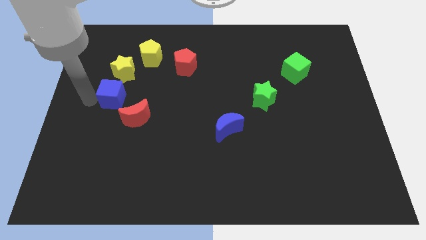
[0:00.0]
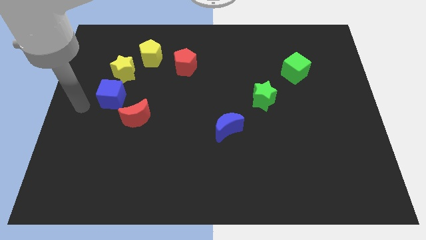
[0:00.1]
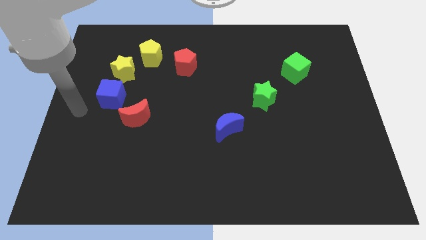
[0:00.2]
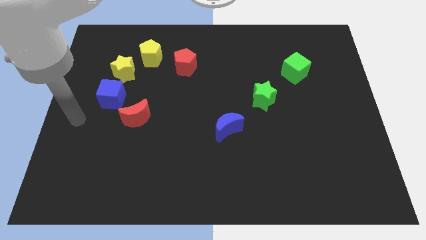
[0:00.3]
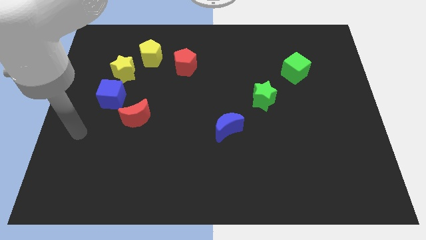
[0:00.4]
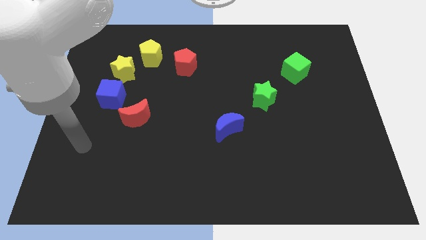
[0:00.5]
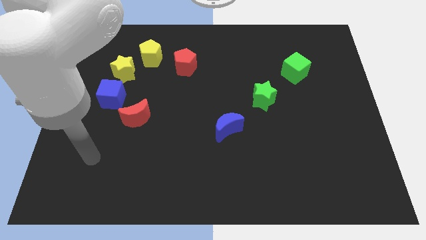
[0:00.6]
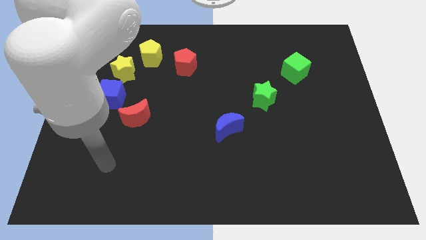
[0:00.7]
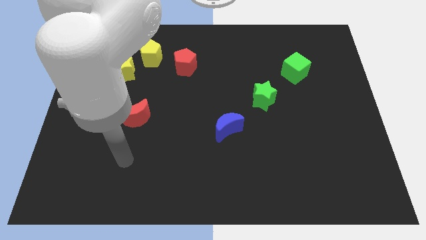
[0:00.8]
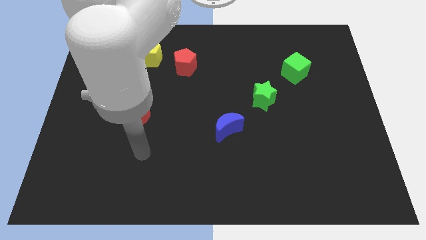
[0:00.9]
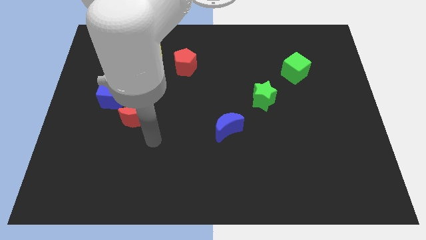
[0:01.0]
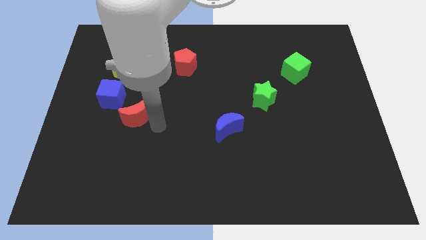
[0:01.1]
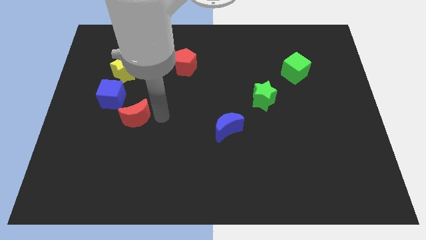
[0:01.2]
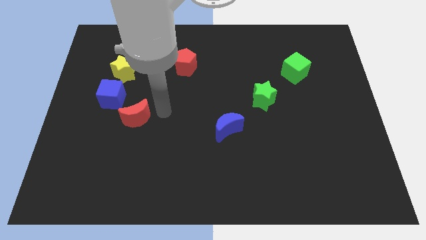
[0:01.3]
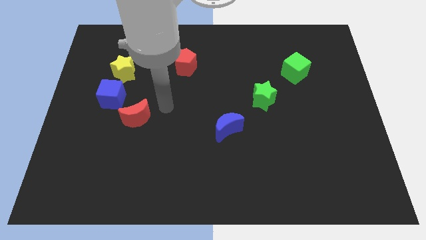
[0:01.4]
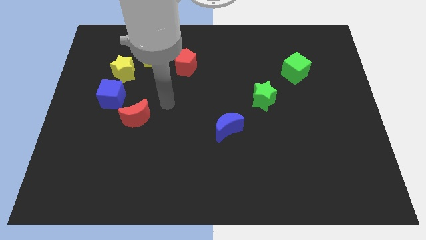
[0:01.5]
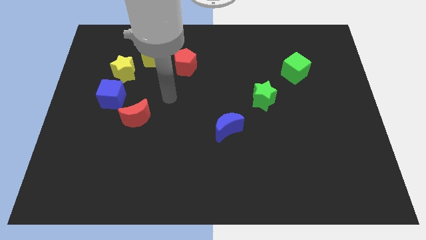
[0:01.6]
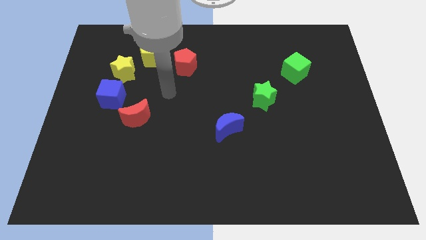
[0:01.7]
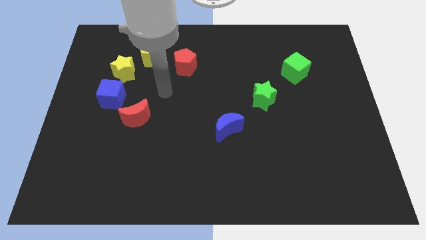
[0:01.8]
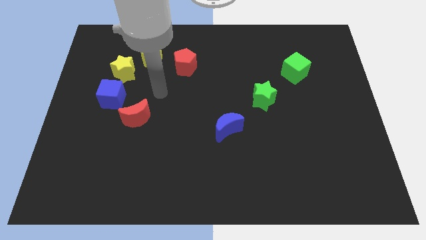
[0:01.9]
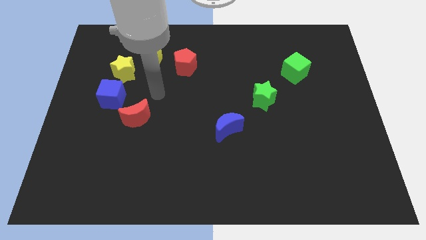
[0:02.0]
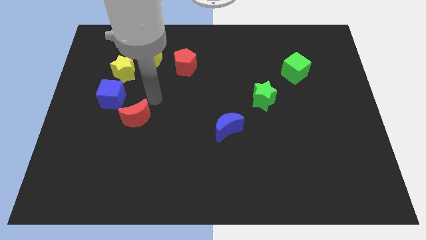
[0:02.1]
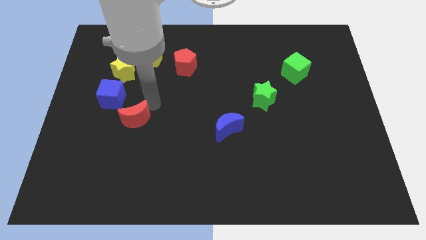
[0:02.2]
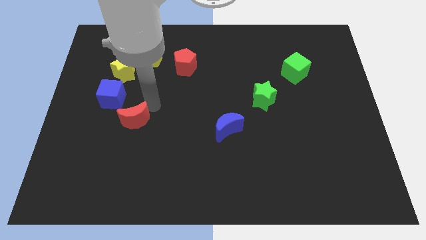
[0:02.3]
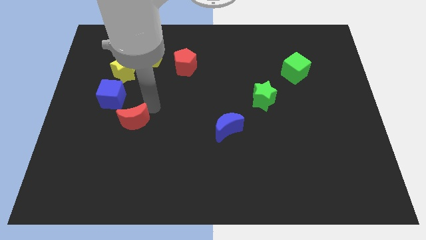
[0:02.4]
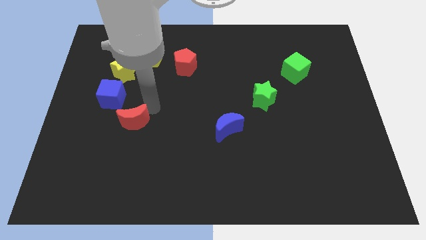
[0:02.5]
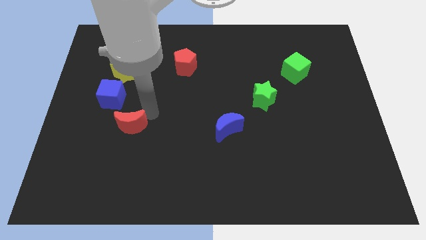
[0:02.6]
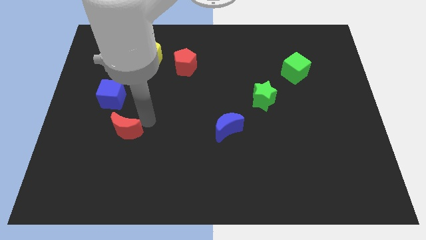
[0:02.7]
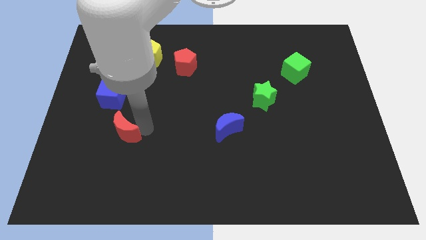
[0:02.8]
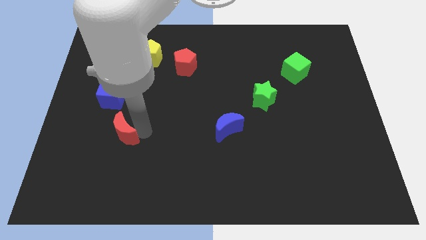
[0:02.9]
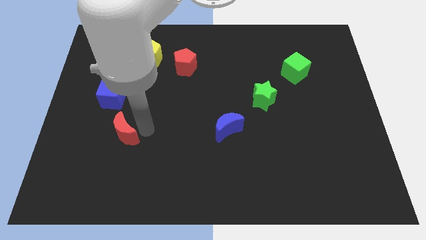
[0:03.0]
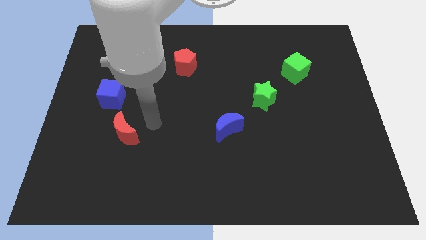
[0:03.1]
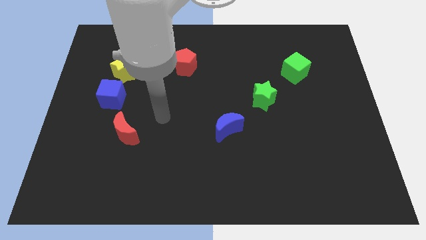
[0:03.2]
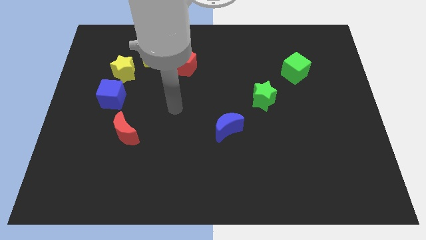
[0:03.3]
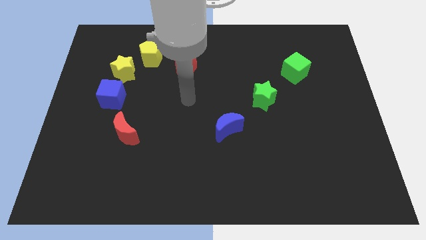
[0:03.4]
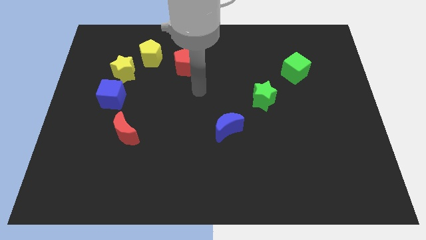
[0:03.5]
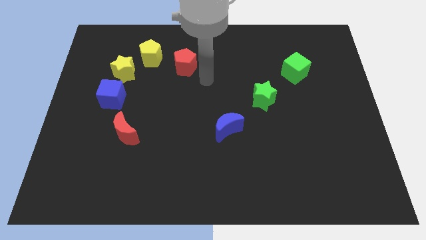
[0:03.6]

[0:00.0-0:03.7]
put the red moon parallel left to the blue moon

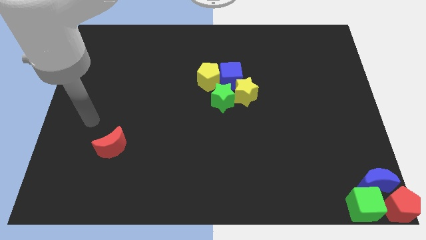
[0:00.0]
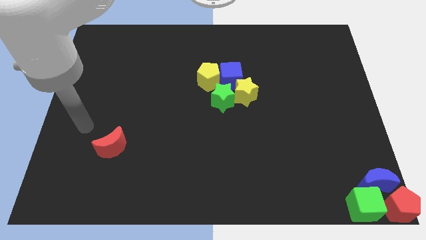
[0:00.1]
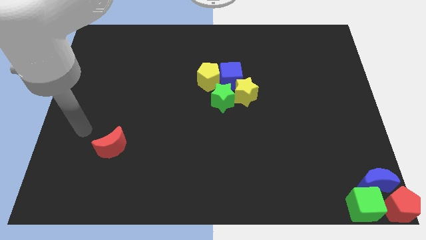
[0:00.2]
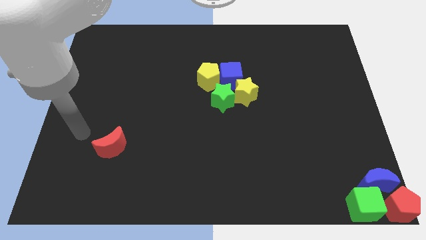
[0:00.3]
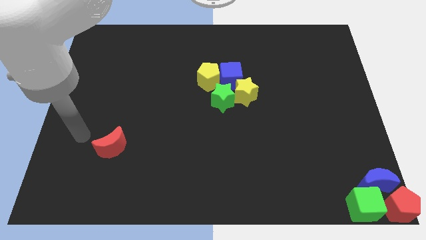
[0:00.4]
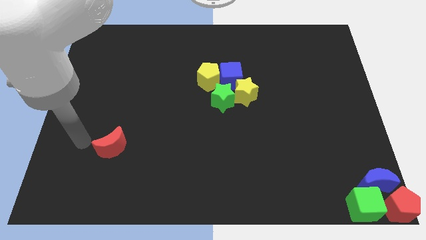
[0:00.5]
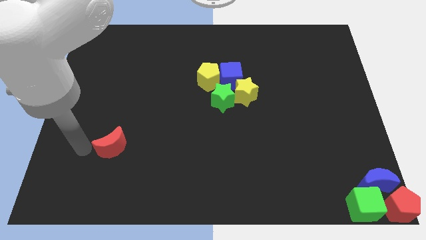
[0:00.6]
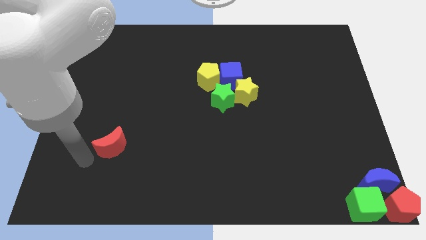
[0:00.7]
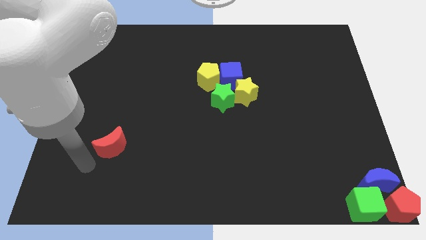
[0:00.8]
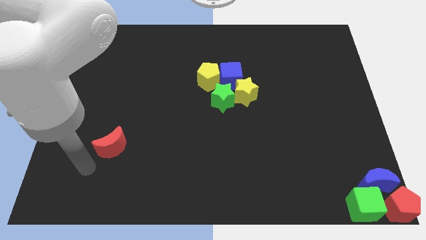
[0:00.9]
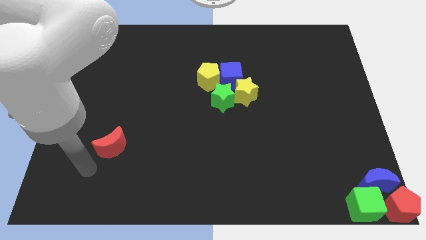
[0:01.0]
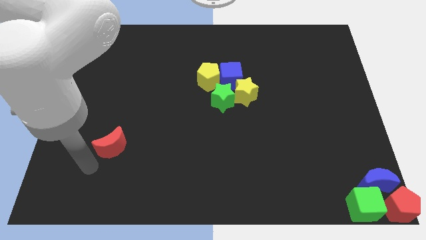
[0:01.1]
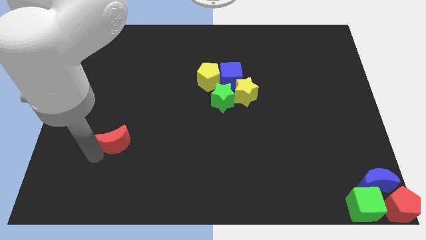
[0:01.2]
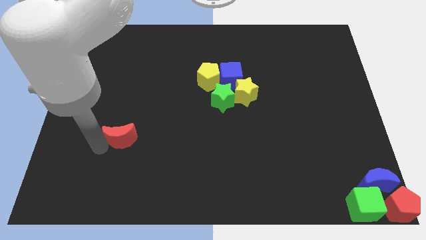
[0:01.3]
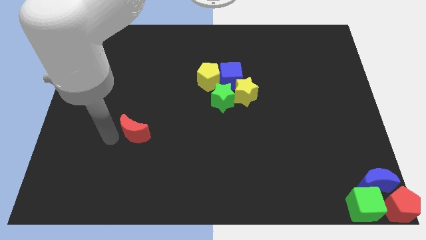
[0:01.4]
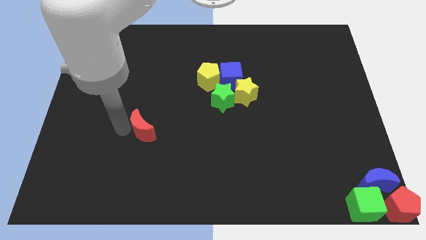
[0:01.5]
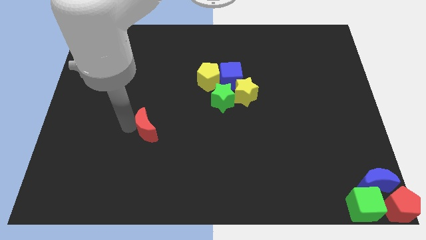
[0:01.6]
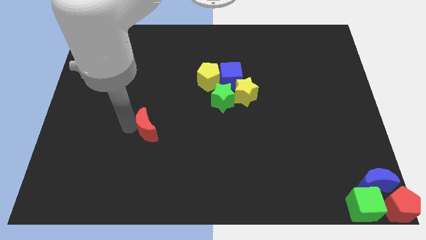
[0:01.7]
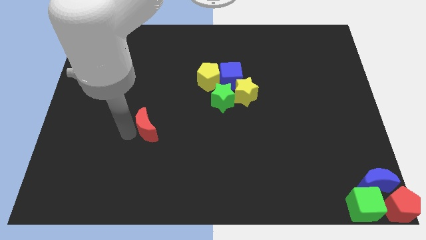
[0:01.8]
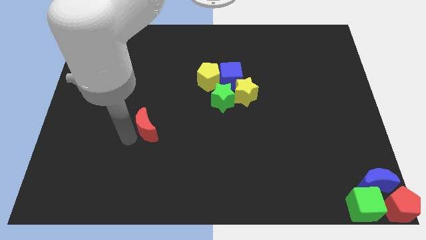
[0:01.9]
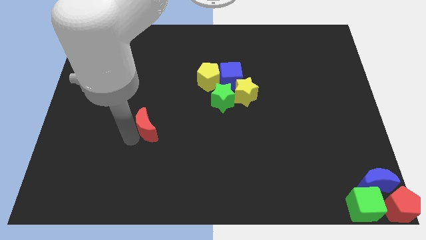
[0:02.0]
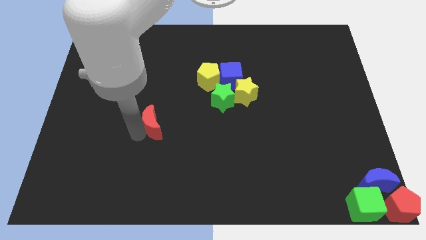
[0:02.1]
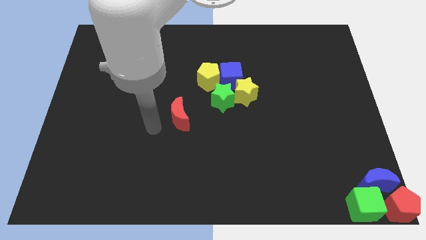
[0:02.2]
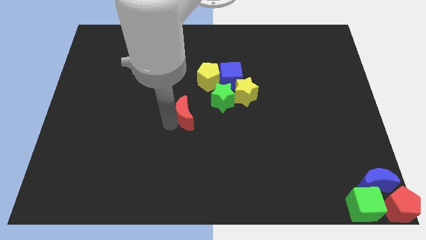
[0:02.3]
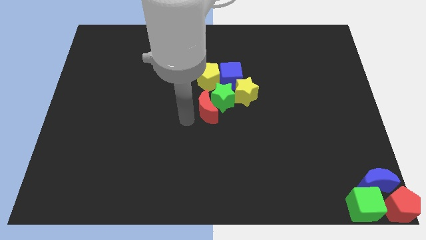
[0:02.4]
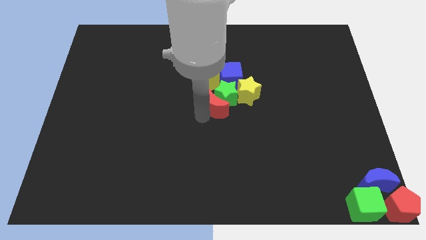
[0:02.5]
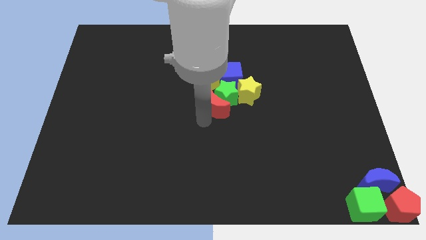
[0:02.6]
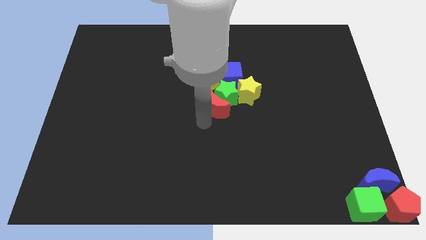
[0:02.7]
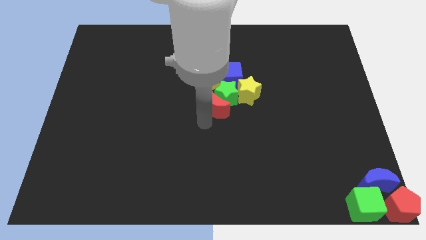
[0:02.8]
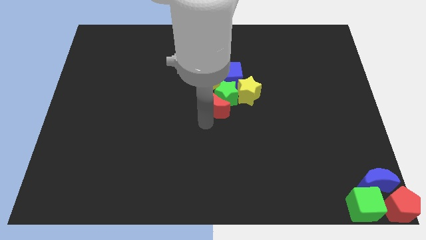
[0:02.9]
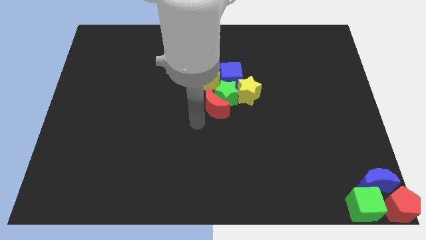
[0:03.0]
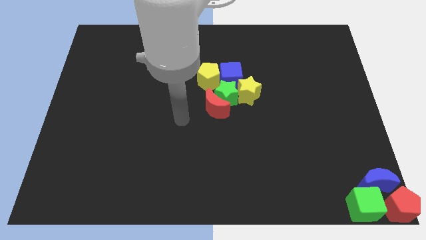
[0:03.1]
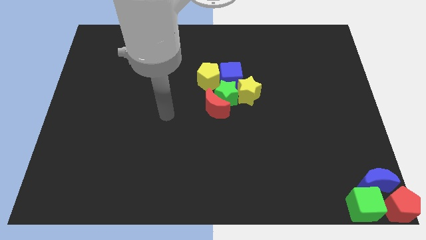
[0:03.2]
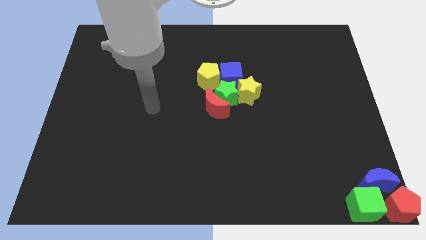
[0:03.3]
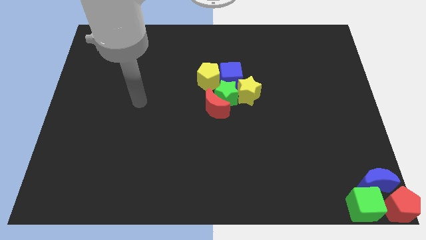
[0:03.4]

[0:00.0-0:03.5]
push red crescent into green star

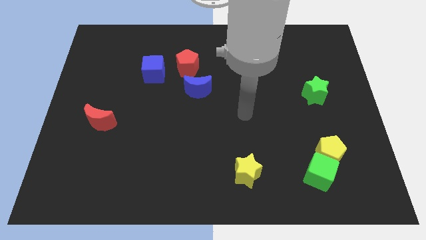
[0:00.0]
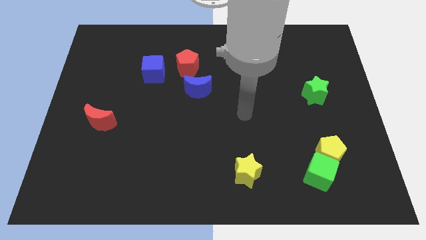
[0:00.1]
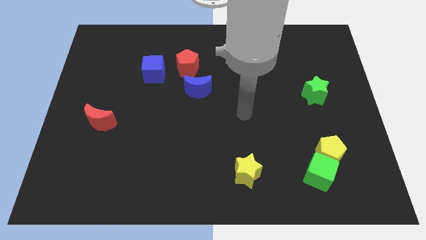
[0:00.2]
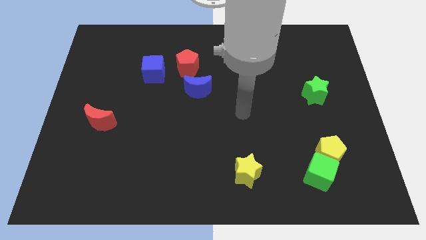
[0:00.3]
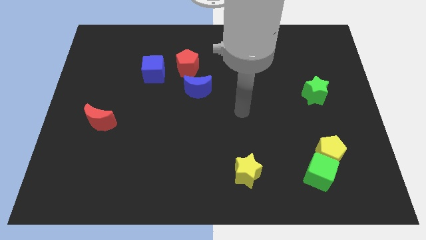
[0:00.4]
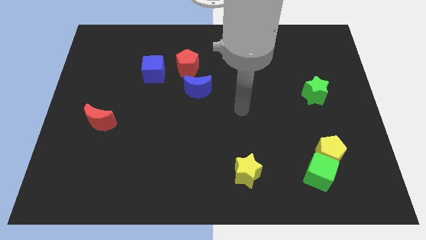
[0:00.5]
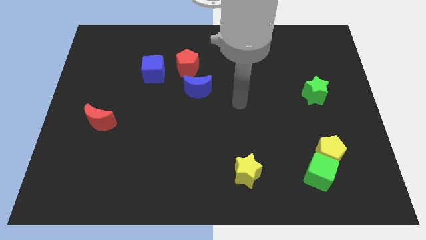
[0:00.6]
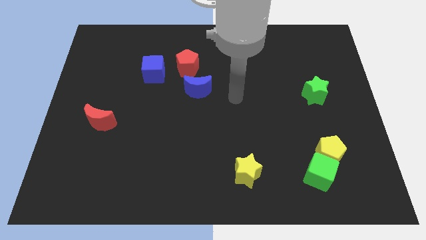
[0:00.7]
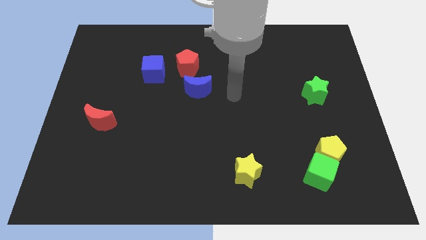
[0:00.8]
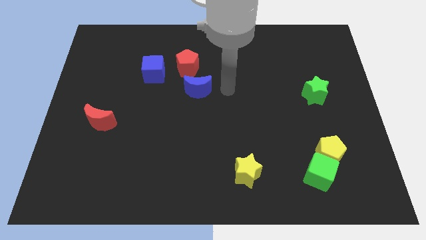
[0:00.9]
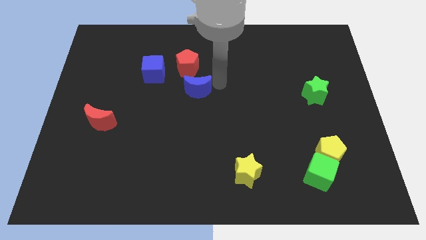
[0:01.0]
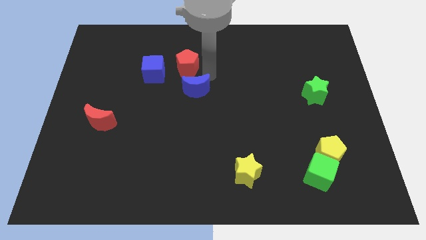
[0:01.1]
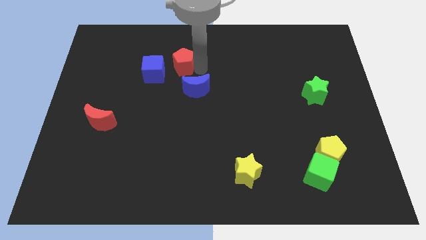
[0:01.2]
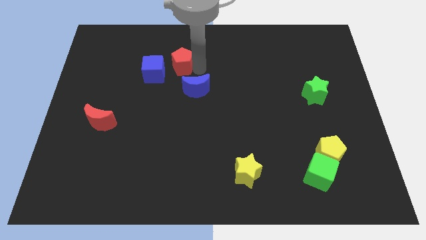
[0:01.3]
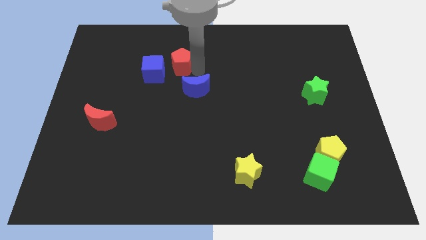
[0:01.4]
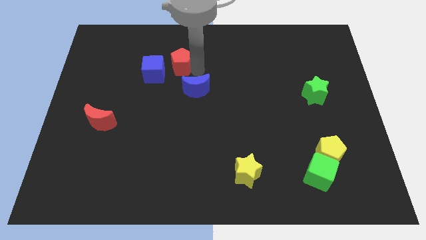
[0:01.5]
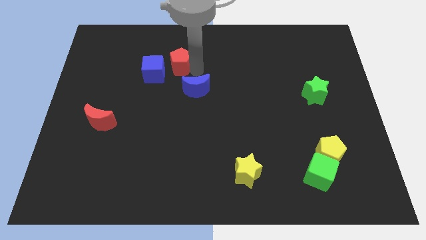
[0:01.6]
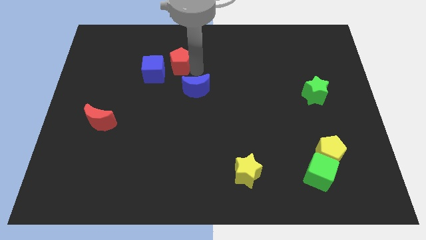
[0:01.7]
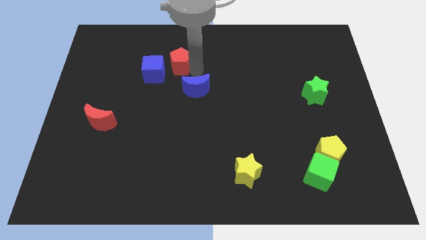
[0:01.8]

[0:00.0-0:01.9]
touch the bottom right of the red pentagon
